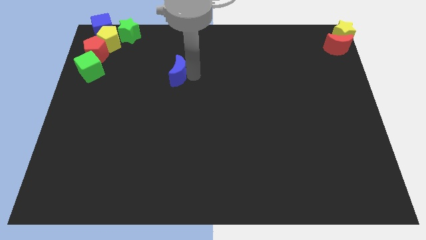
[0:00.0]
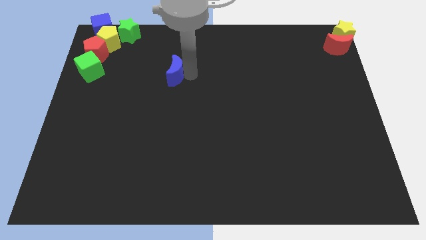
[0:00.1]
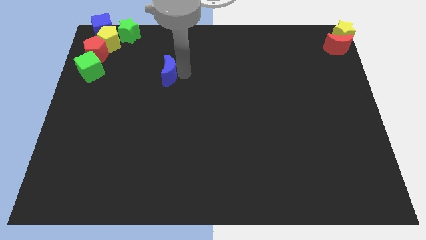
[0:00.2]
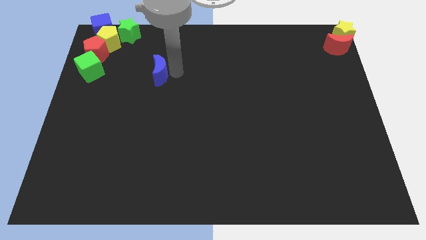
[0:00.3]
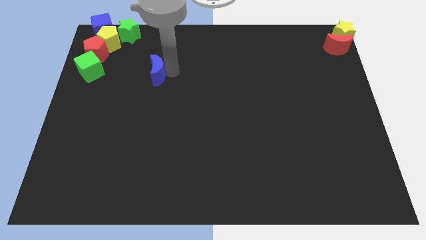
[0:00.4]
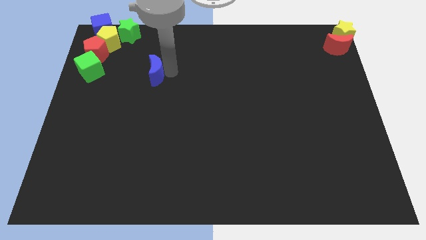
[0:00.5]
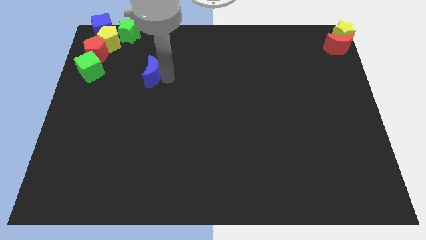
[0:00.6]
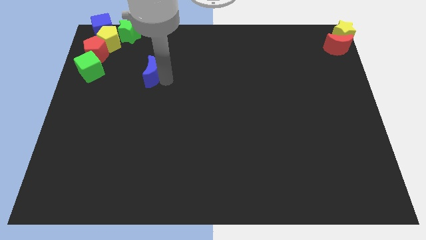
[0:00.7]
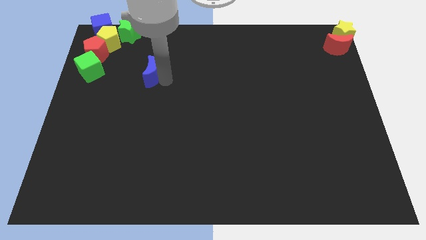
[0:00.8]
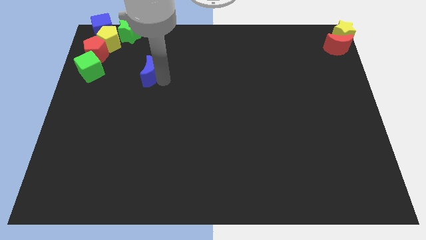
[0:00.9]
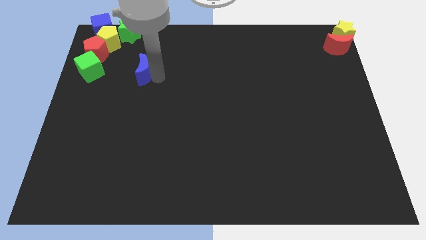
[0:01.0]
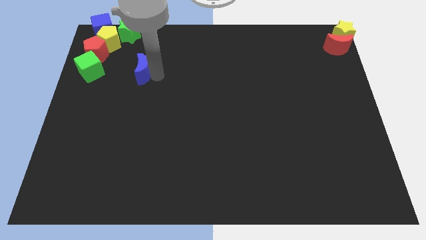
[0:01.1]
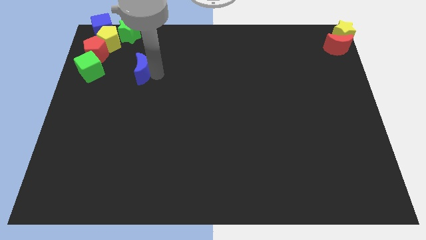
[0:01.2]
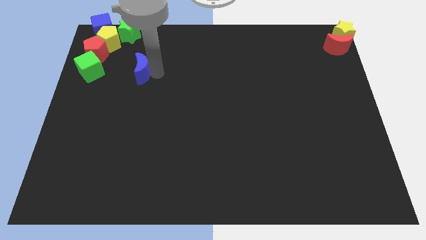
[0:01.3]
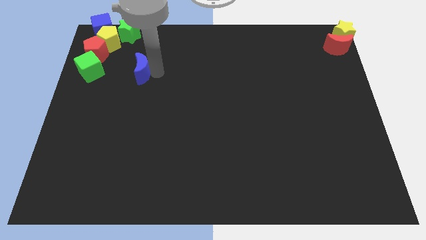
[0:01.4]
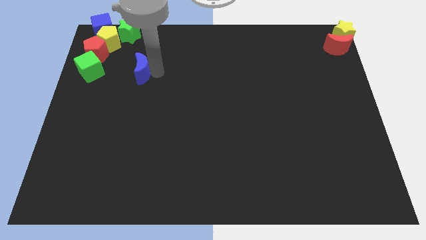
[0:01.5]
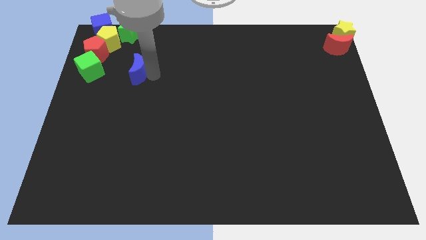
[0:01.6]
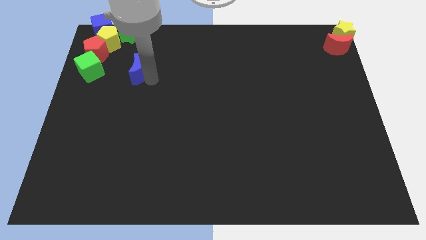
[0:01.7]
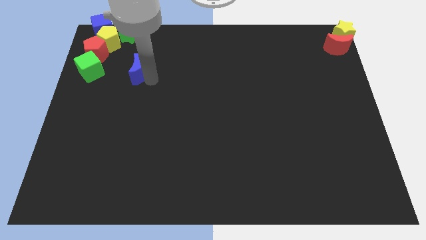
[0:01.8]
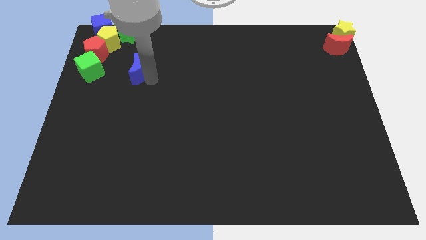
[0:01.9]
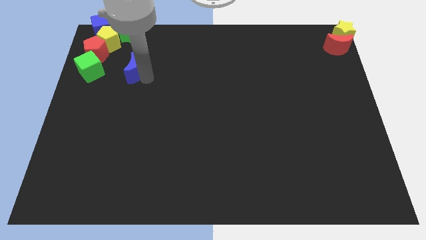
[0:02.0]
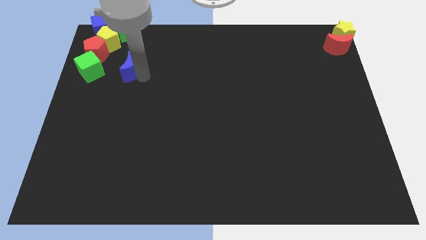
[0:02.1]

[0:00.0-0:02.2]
push blue moon to the right of green cube

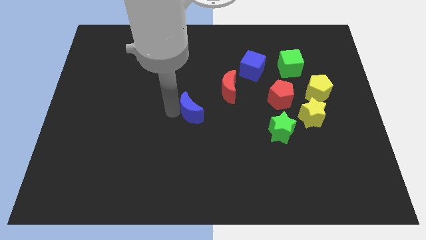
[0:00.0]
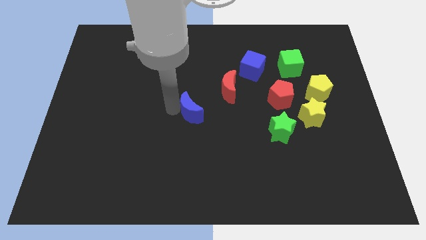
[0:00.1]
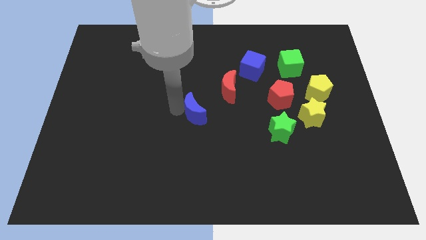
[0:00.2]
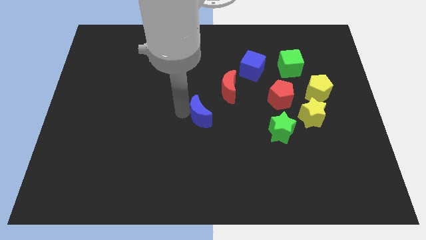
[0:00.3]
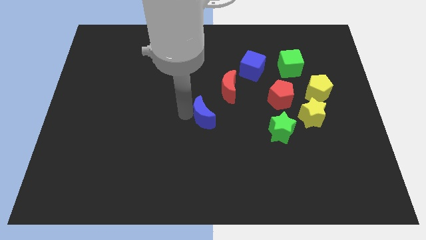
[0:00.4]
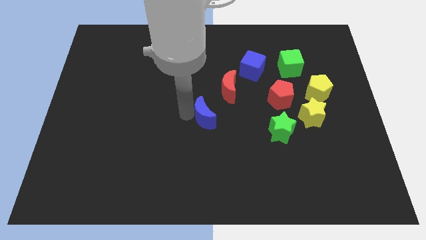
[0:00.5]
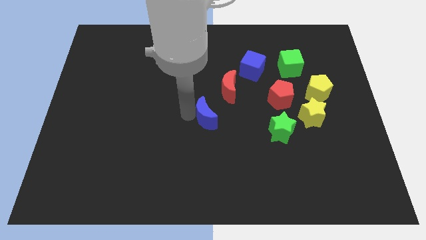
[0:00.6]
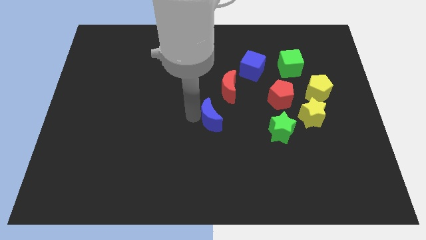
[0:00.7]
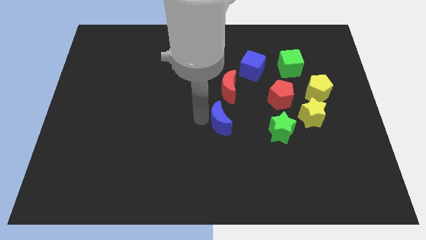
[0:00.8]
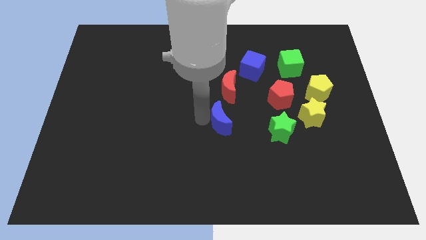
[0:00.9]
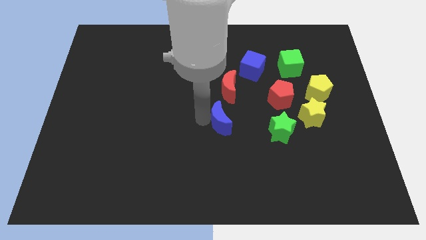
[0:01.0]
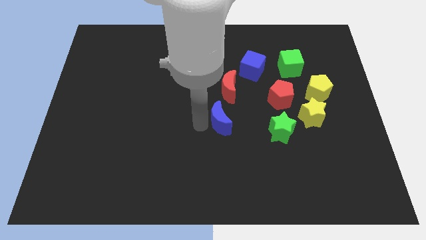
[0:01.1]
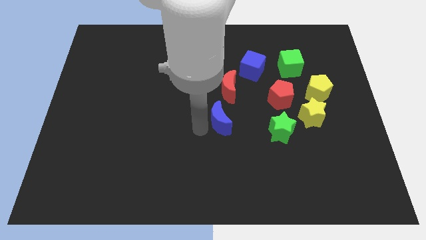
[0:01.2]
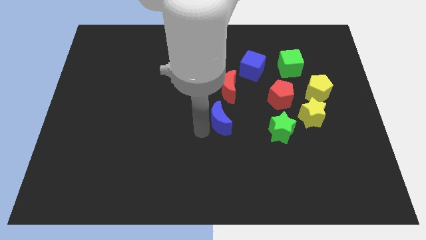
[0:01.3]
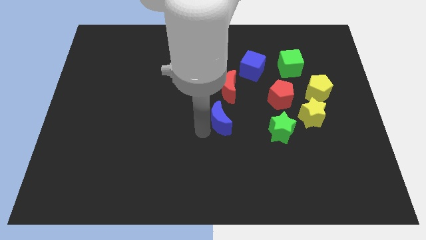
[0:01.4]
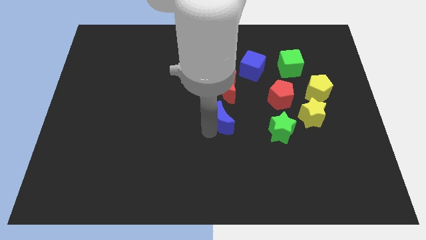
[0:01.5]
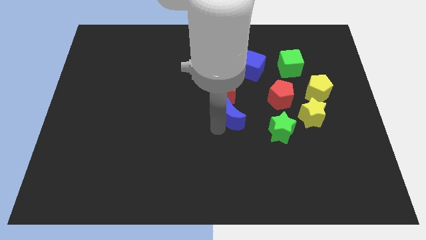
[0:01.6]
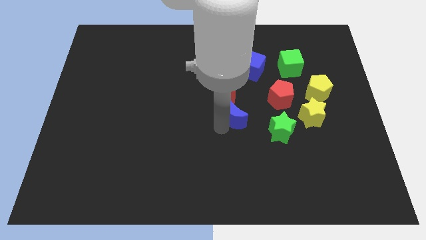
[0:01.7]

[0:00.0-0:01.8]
place the blue crescent under the red crescent

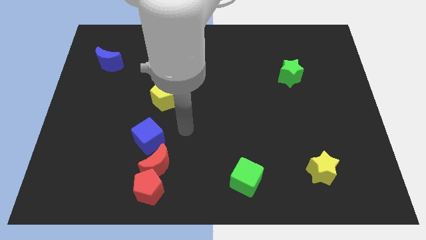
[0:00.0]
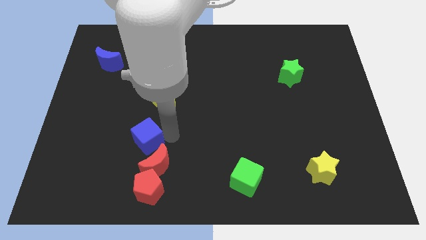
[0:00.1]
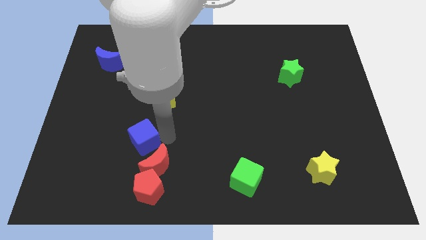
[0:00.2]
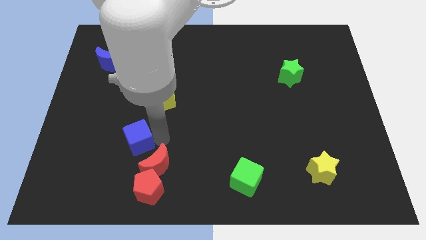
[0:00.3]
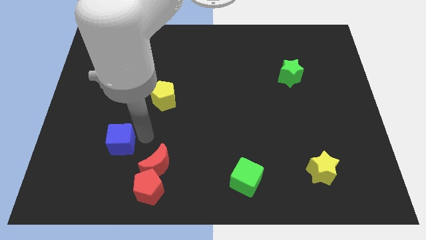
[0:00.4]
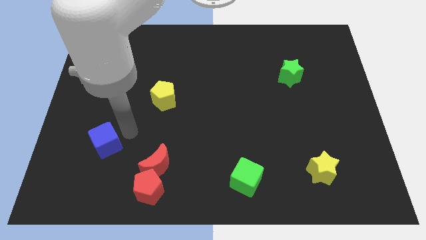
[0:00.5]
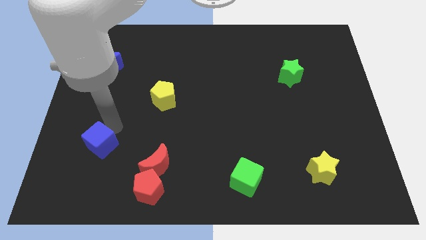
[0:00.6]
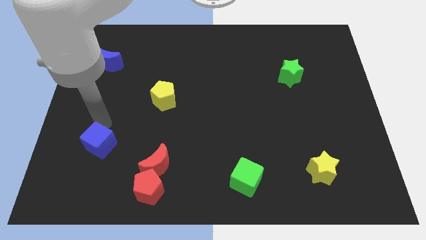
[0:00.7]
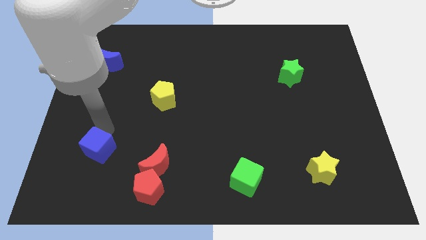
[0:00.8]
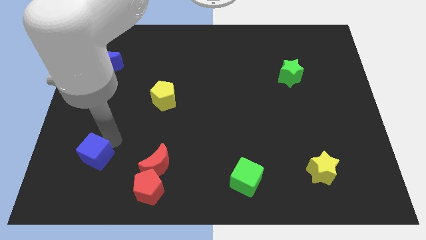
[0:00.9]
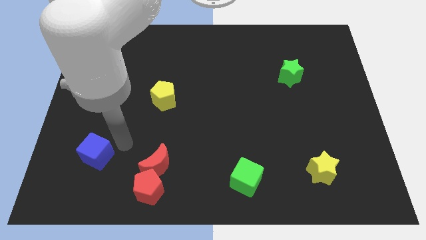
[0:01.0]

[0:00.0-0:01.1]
push the blue cube away from the red moon

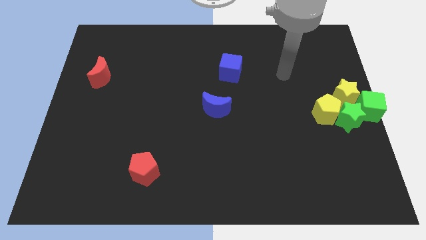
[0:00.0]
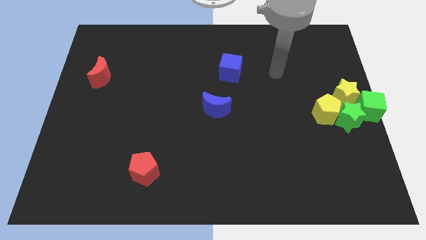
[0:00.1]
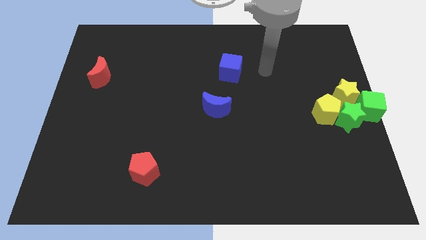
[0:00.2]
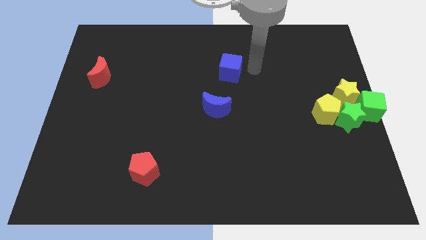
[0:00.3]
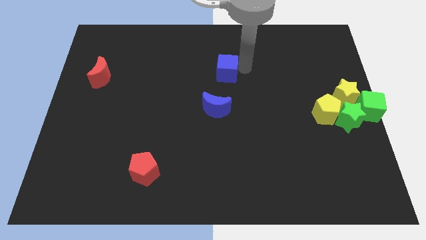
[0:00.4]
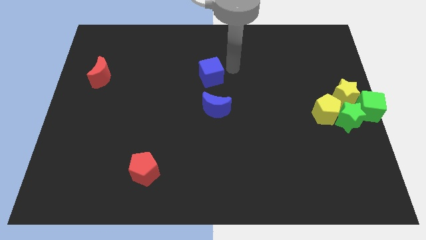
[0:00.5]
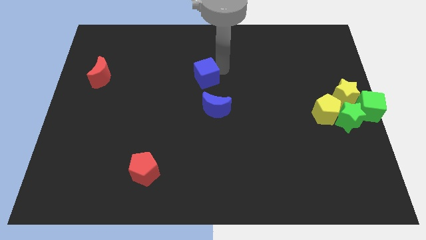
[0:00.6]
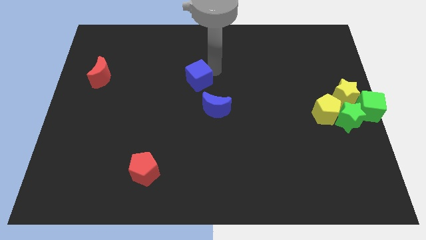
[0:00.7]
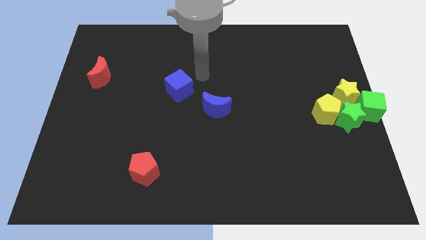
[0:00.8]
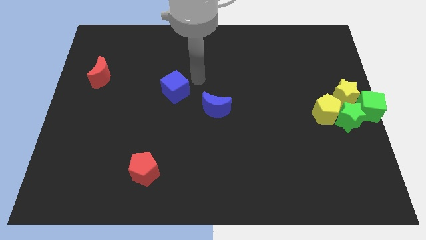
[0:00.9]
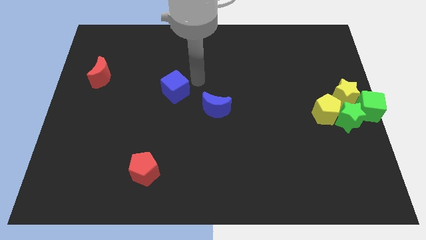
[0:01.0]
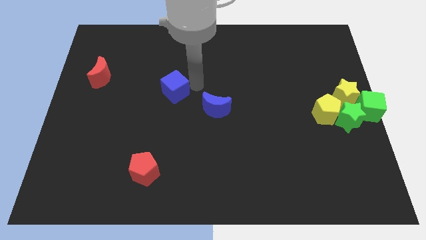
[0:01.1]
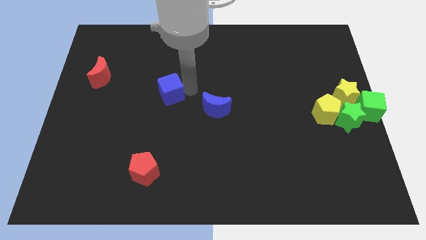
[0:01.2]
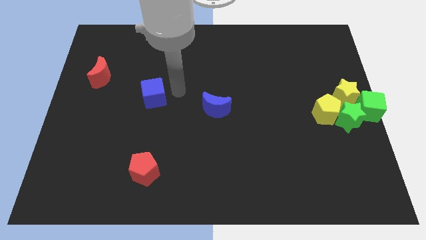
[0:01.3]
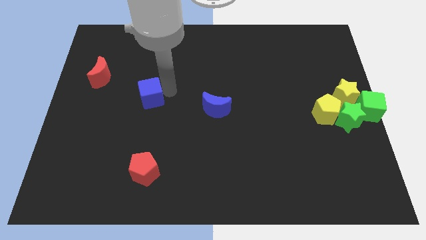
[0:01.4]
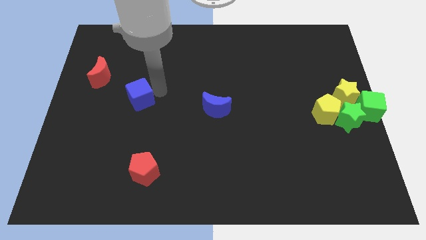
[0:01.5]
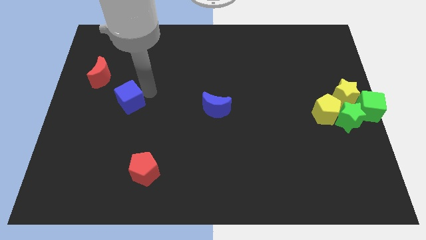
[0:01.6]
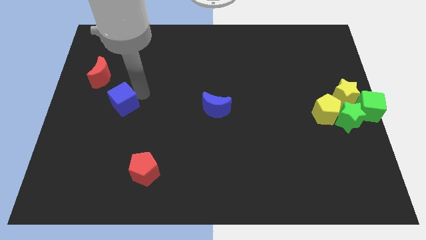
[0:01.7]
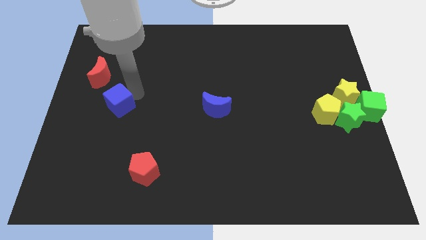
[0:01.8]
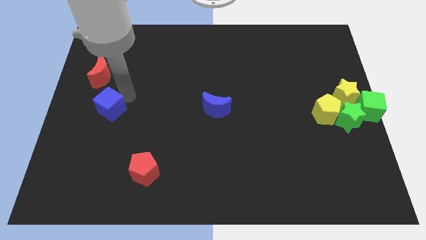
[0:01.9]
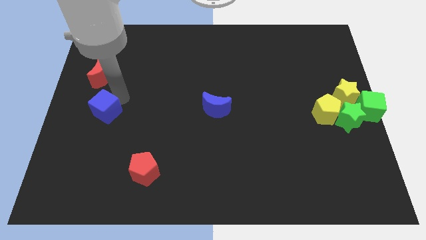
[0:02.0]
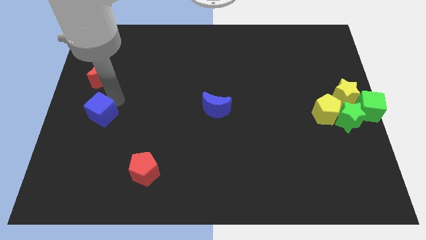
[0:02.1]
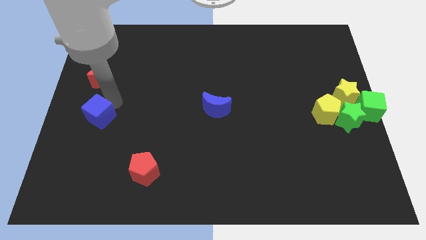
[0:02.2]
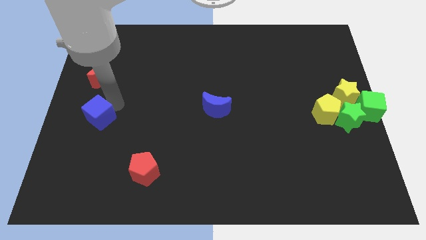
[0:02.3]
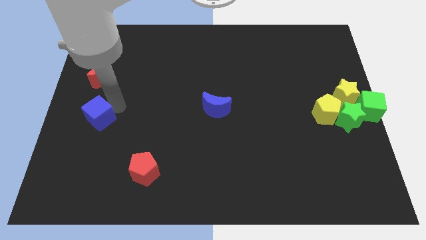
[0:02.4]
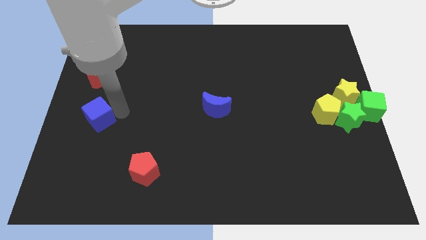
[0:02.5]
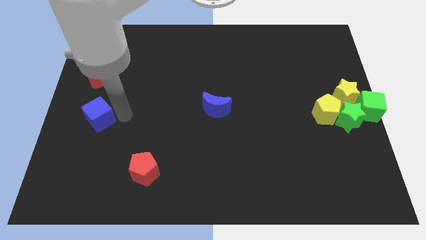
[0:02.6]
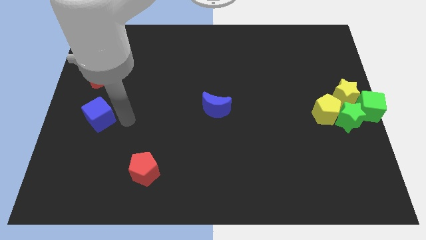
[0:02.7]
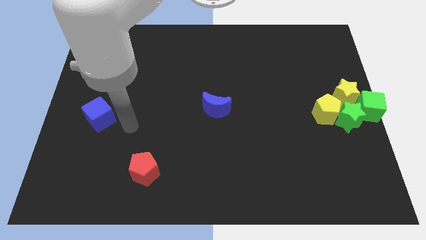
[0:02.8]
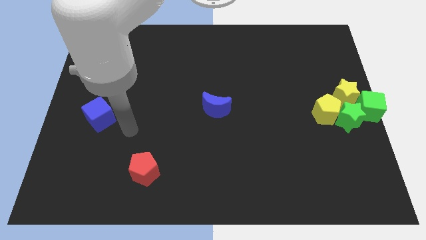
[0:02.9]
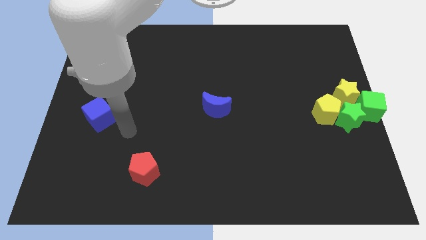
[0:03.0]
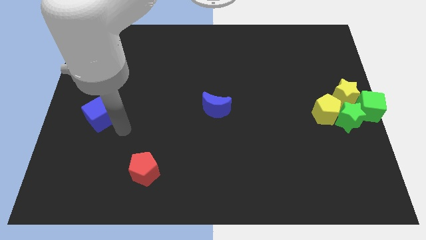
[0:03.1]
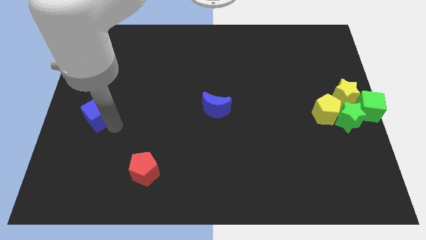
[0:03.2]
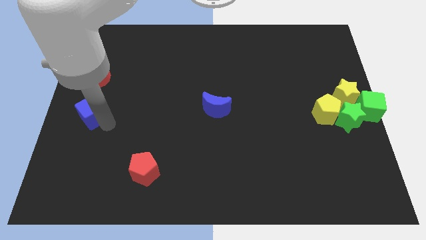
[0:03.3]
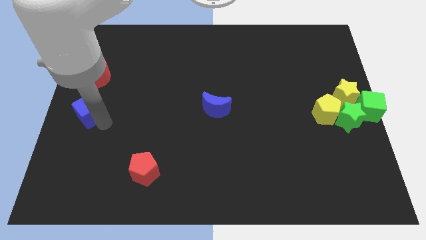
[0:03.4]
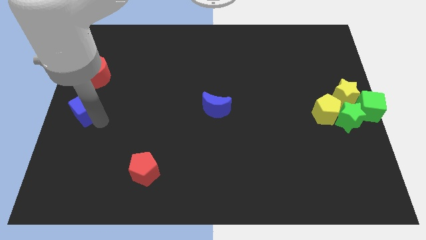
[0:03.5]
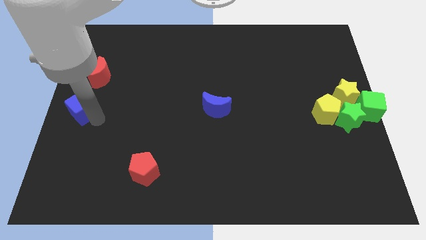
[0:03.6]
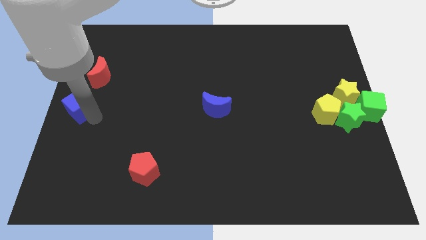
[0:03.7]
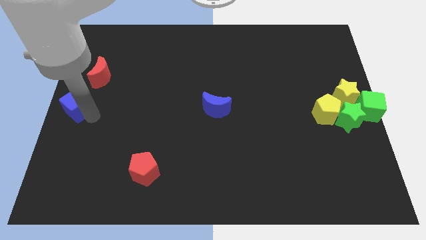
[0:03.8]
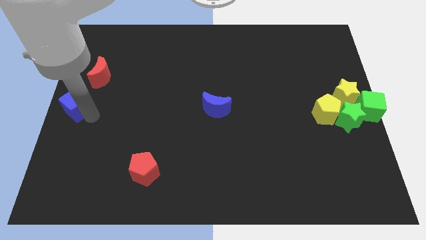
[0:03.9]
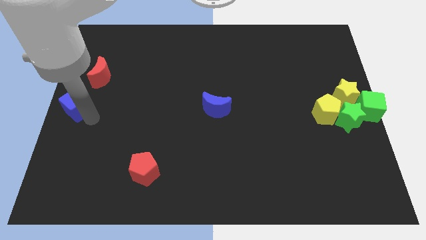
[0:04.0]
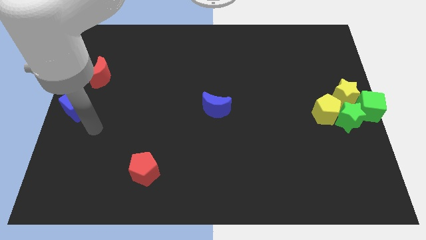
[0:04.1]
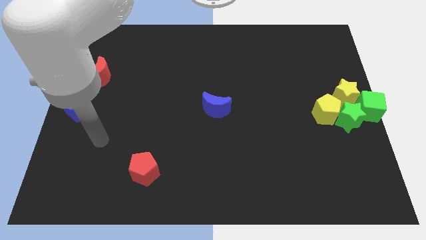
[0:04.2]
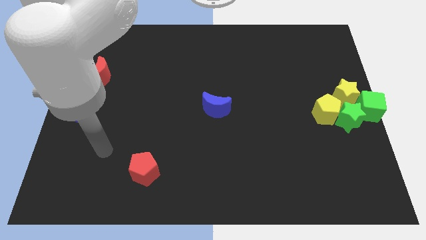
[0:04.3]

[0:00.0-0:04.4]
push the blue cube towards the left center of the board
